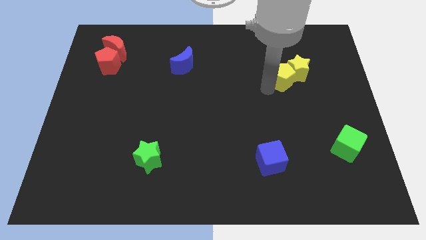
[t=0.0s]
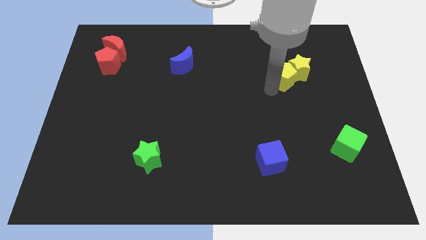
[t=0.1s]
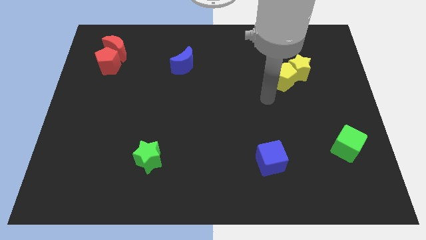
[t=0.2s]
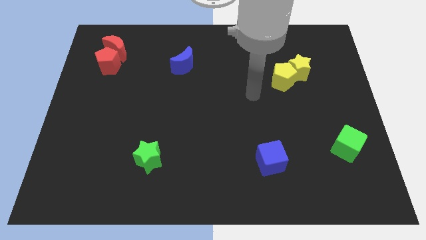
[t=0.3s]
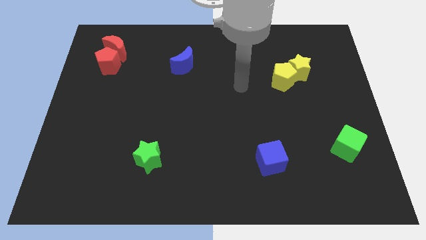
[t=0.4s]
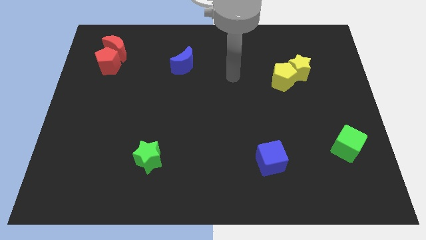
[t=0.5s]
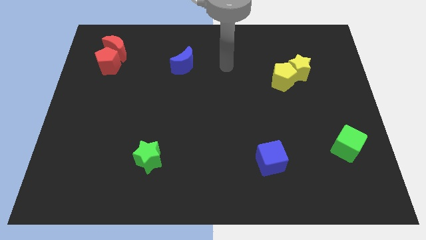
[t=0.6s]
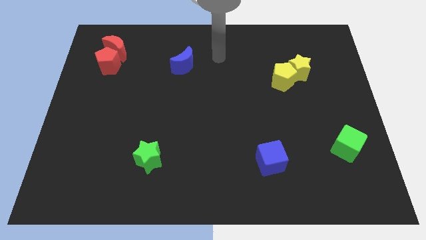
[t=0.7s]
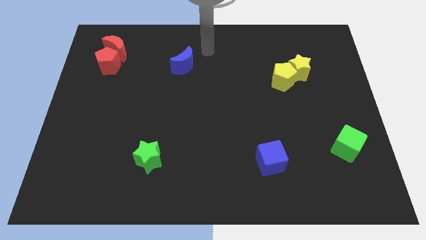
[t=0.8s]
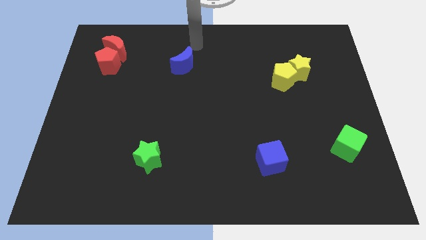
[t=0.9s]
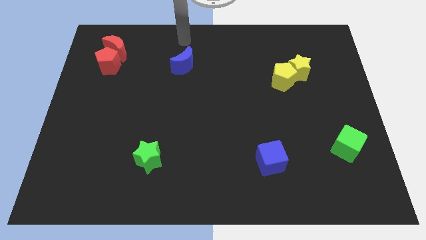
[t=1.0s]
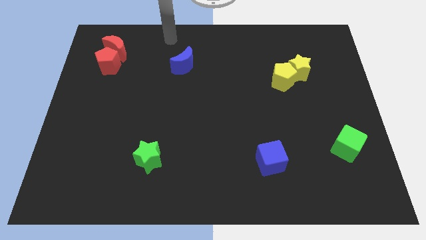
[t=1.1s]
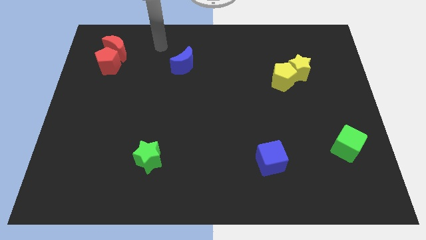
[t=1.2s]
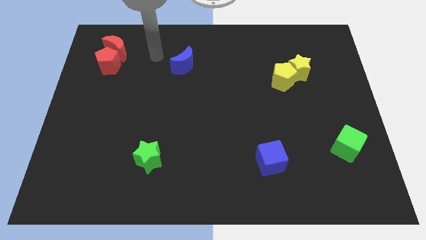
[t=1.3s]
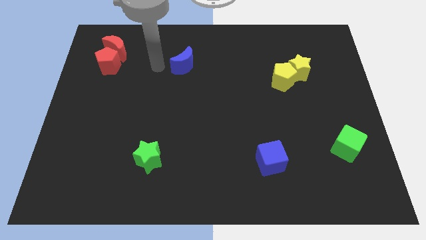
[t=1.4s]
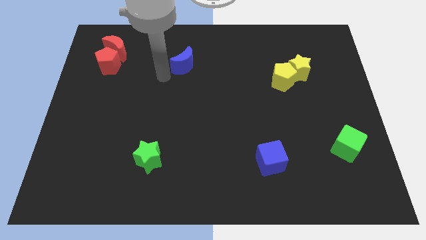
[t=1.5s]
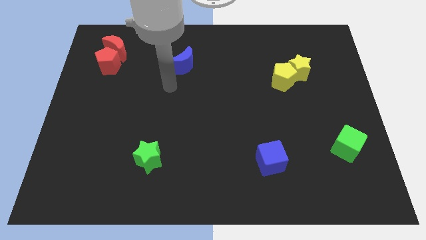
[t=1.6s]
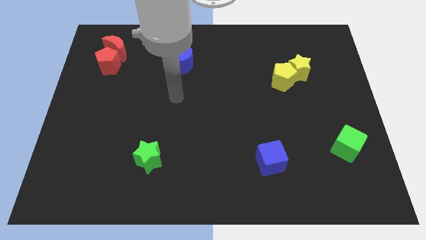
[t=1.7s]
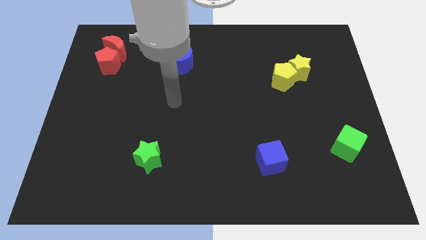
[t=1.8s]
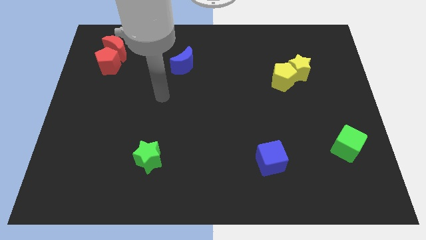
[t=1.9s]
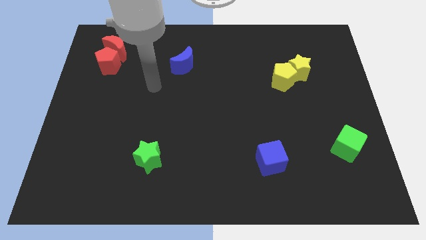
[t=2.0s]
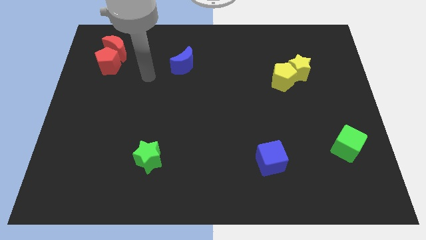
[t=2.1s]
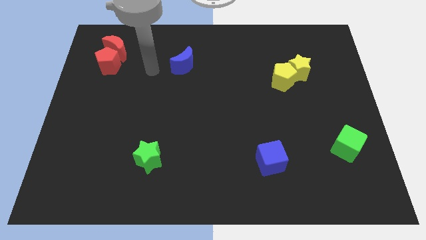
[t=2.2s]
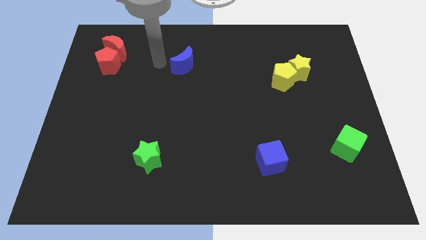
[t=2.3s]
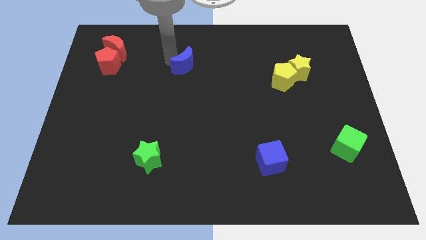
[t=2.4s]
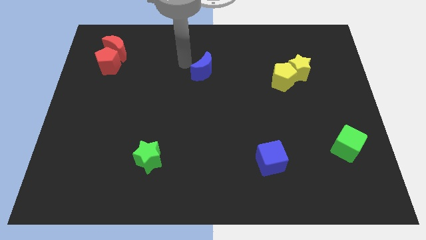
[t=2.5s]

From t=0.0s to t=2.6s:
place your arm to the left of blue moon

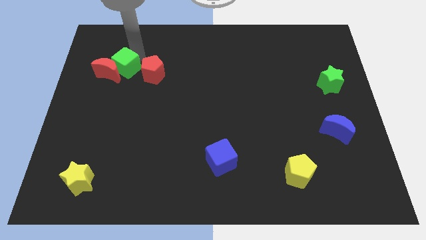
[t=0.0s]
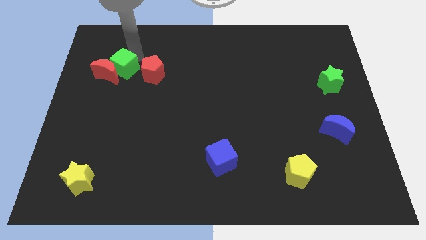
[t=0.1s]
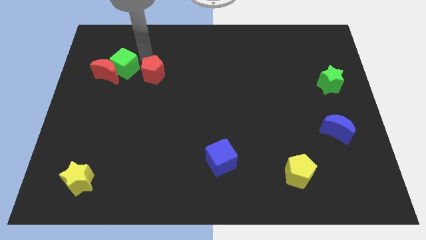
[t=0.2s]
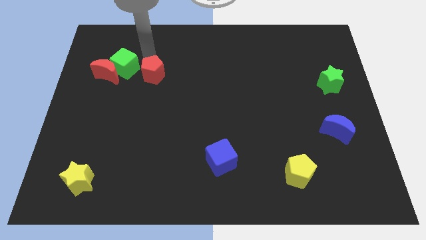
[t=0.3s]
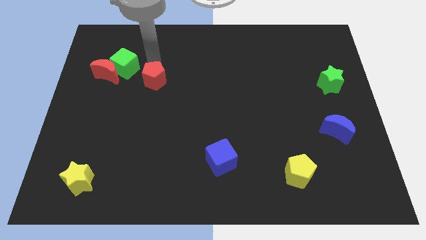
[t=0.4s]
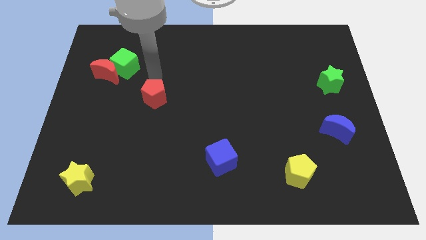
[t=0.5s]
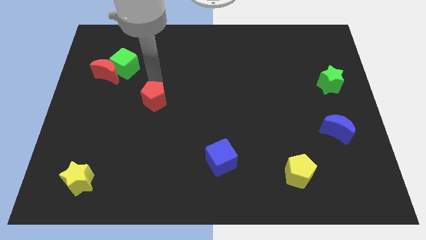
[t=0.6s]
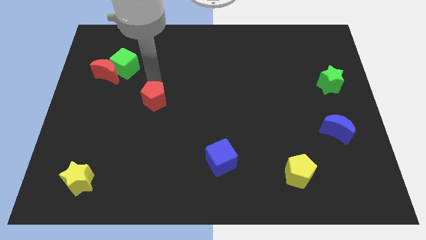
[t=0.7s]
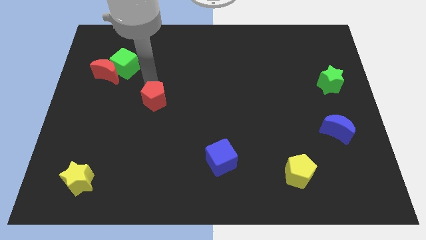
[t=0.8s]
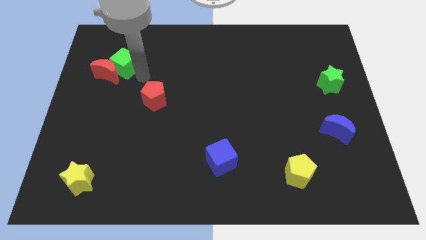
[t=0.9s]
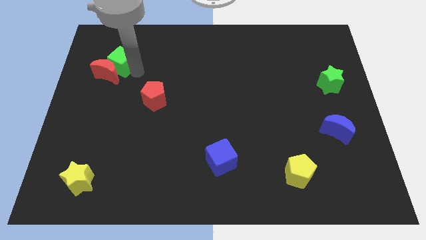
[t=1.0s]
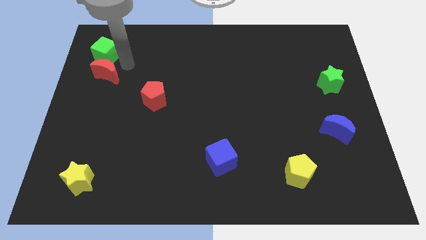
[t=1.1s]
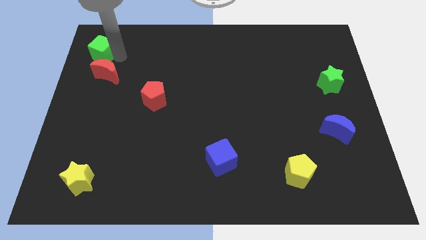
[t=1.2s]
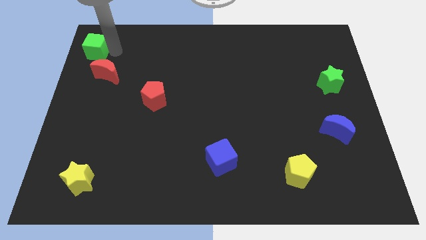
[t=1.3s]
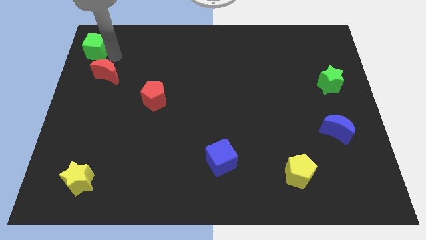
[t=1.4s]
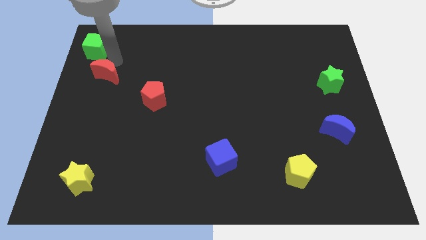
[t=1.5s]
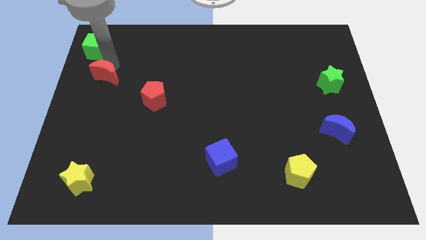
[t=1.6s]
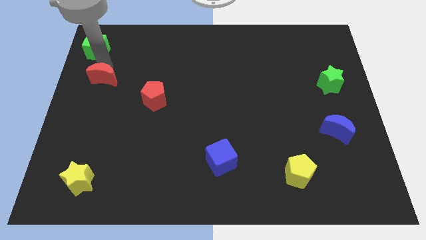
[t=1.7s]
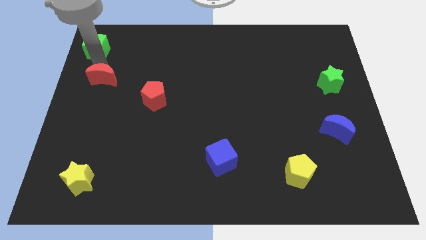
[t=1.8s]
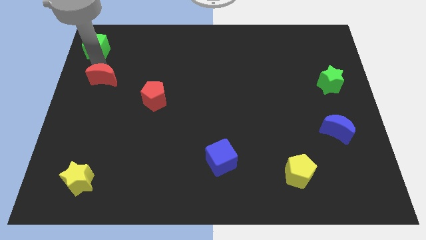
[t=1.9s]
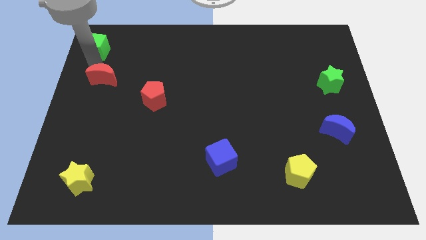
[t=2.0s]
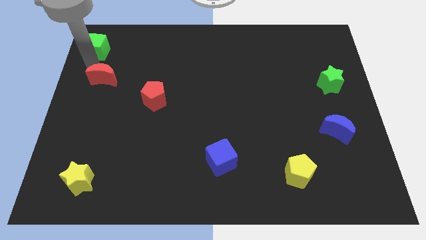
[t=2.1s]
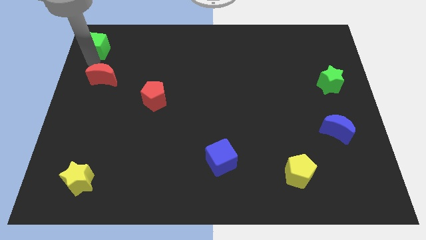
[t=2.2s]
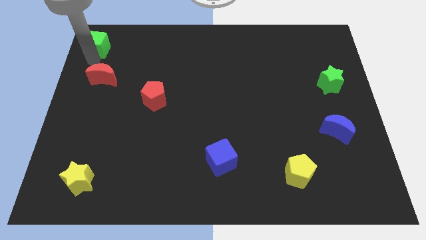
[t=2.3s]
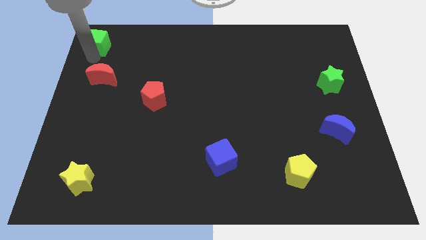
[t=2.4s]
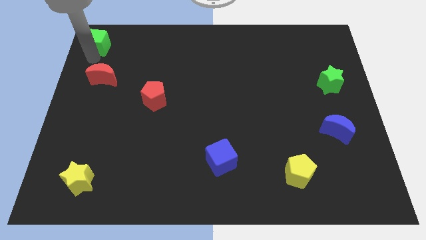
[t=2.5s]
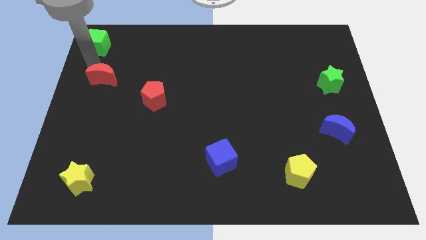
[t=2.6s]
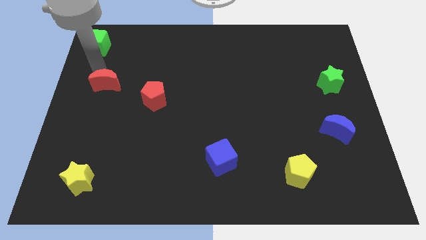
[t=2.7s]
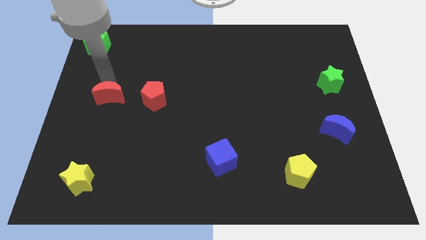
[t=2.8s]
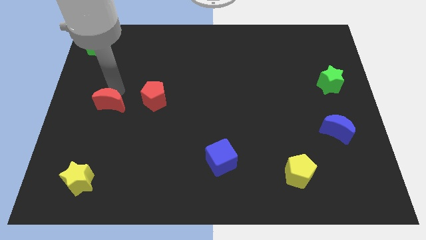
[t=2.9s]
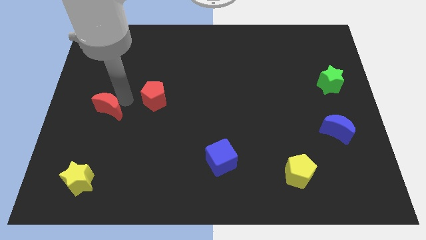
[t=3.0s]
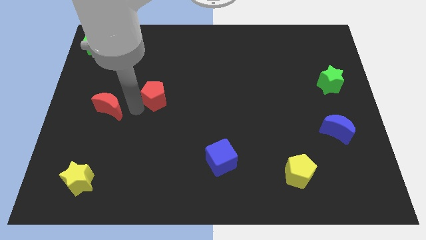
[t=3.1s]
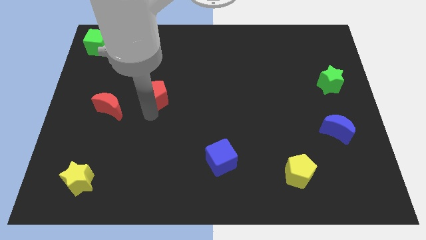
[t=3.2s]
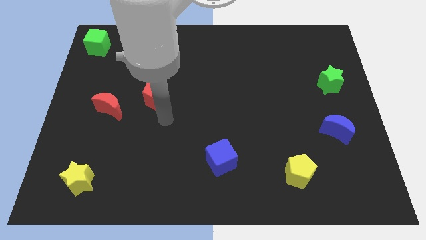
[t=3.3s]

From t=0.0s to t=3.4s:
place green cube at the top left corner of the board

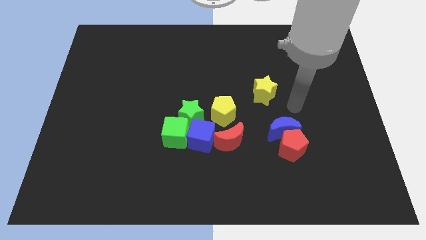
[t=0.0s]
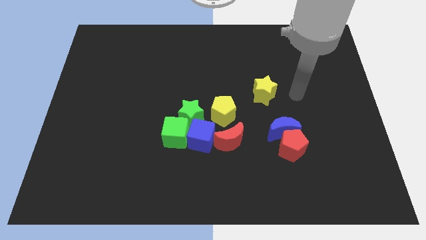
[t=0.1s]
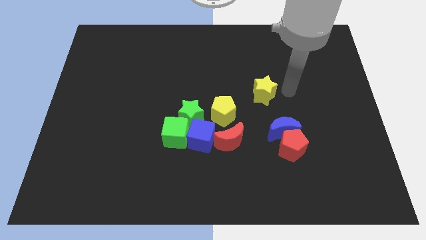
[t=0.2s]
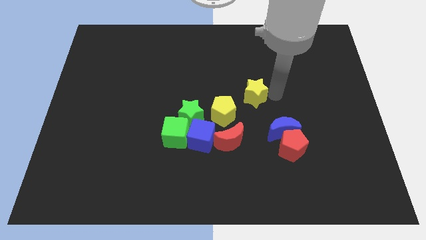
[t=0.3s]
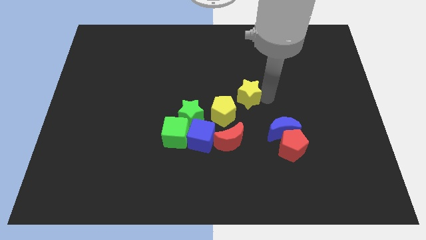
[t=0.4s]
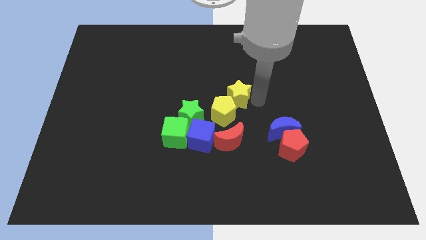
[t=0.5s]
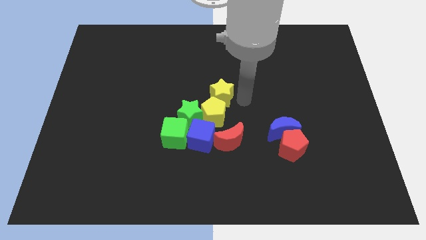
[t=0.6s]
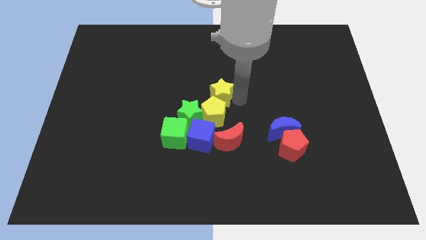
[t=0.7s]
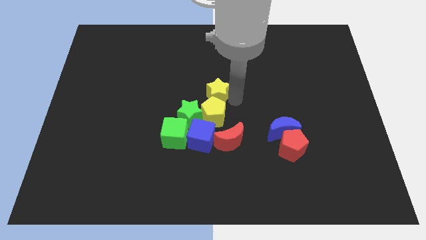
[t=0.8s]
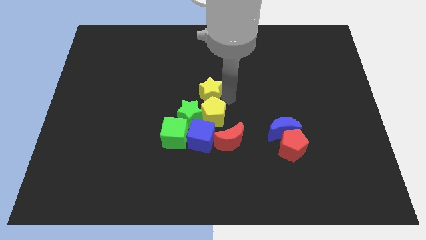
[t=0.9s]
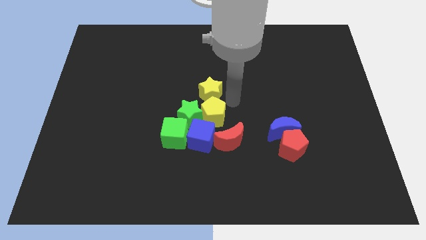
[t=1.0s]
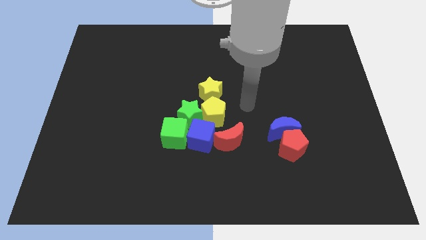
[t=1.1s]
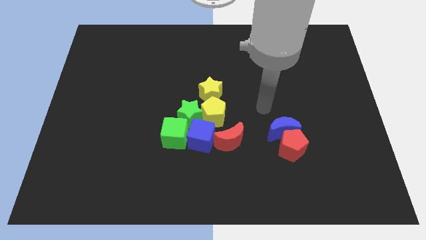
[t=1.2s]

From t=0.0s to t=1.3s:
put the yellow star above the yellow pentagon

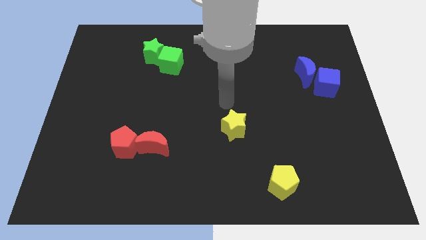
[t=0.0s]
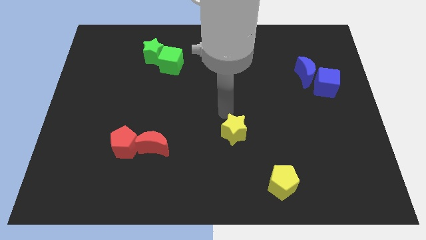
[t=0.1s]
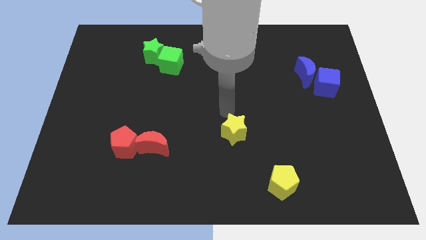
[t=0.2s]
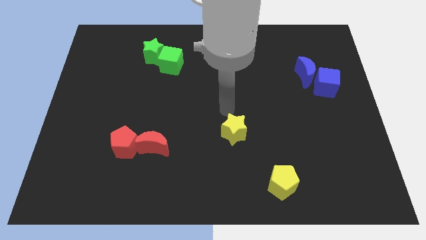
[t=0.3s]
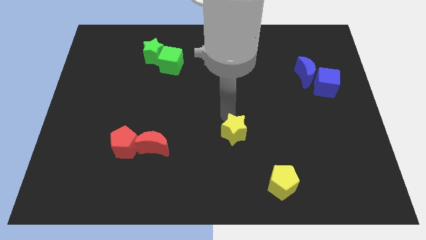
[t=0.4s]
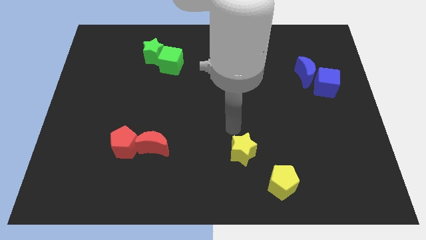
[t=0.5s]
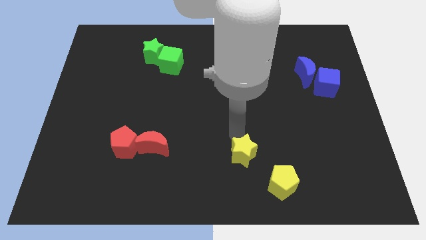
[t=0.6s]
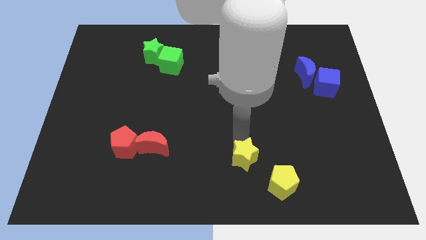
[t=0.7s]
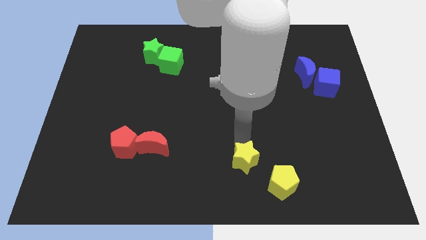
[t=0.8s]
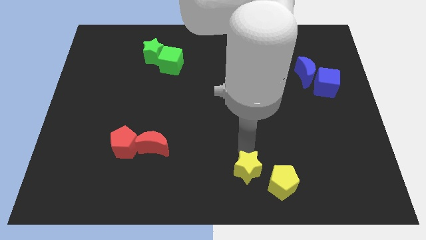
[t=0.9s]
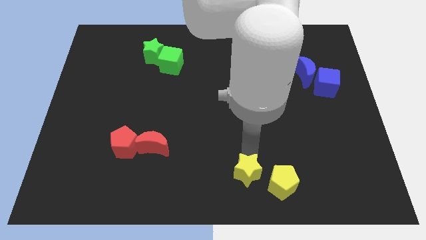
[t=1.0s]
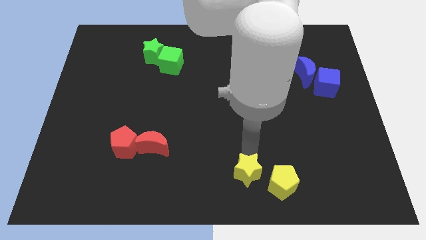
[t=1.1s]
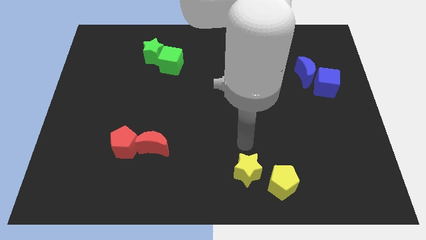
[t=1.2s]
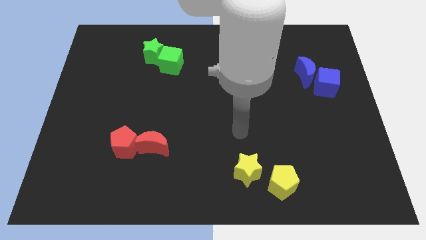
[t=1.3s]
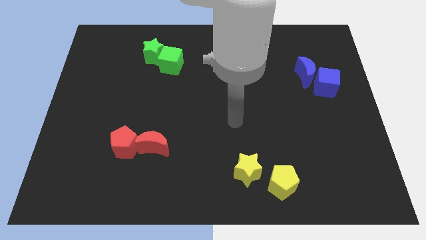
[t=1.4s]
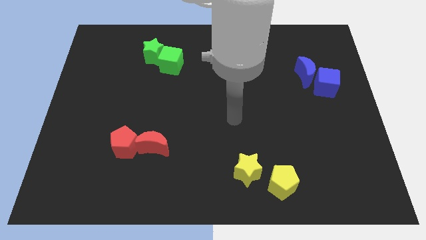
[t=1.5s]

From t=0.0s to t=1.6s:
place yellow star left to the yellow pentagon
